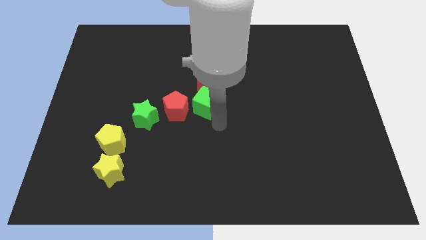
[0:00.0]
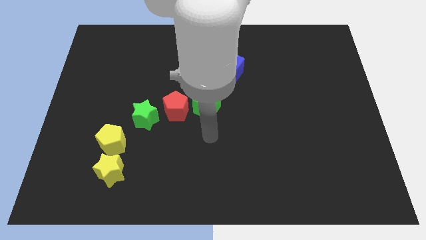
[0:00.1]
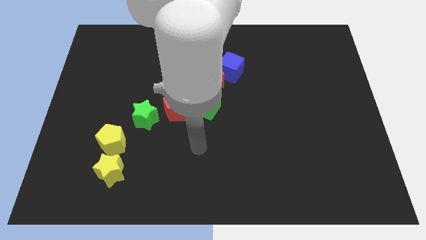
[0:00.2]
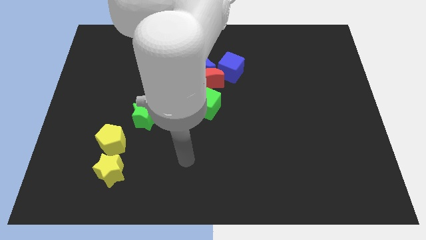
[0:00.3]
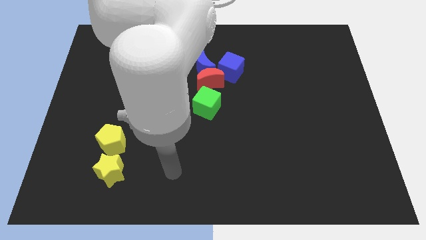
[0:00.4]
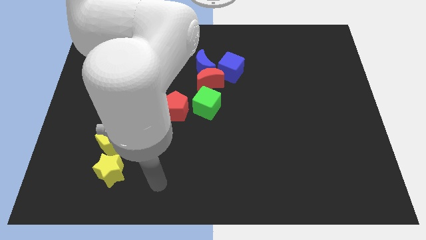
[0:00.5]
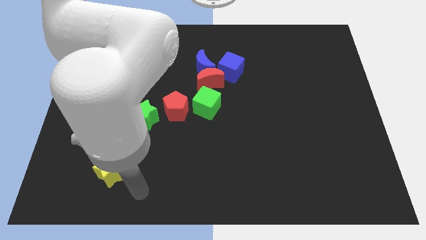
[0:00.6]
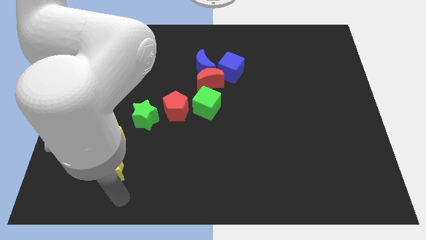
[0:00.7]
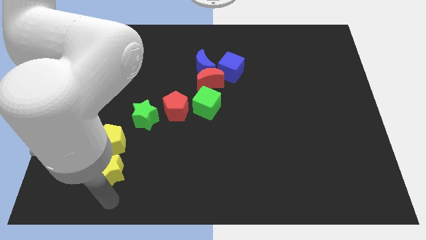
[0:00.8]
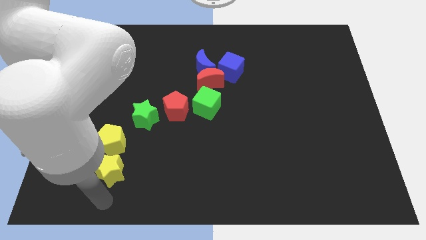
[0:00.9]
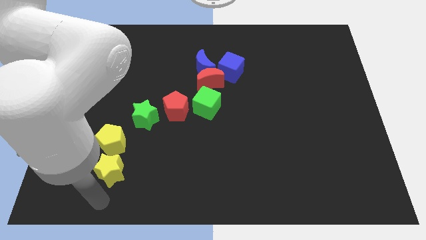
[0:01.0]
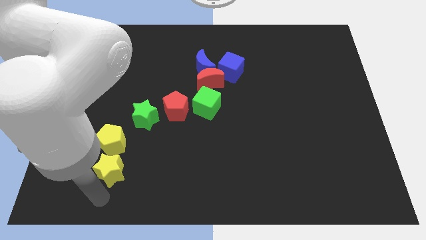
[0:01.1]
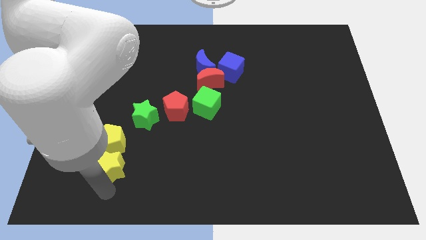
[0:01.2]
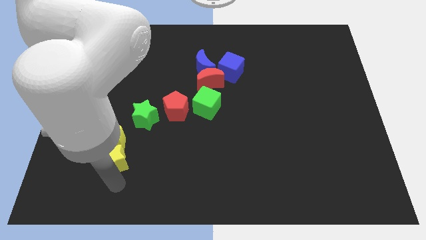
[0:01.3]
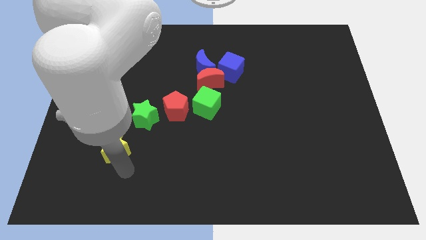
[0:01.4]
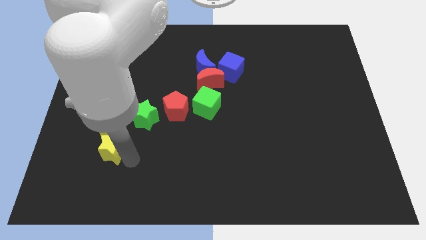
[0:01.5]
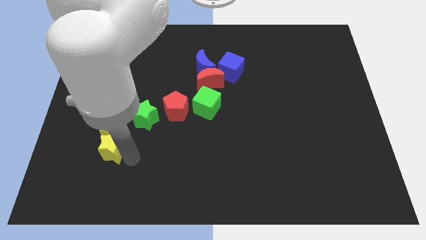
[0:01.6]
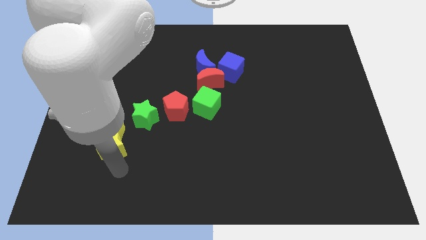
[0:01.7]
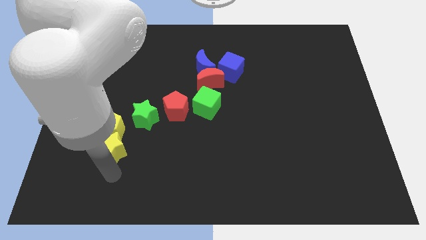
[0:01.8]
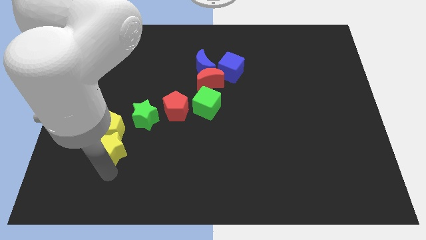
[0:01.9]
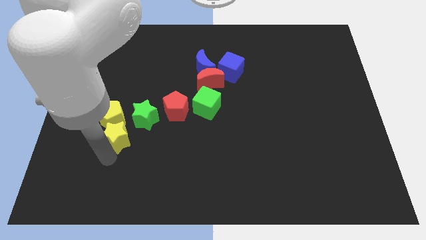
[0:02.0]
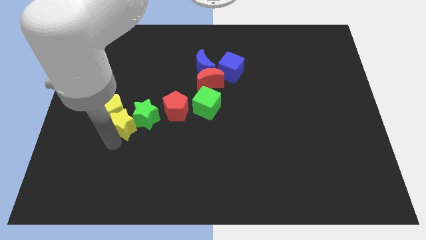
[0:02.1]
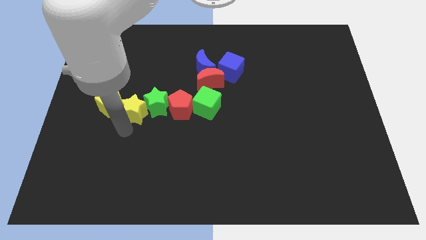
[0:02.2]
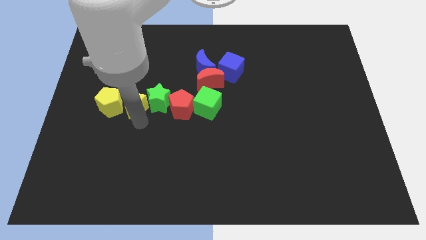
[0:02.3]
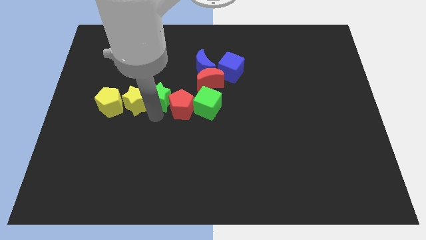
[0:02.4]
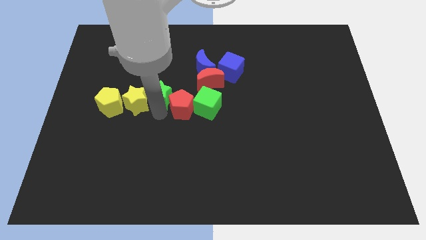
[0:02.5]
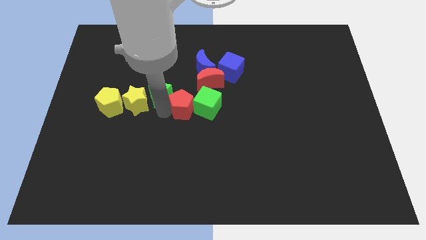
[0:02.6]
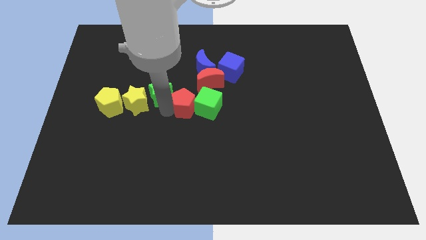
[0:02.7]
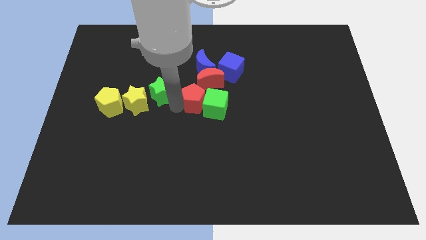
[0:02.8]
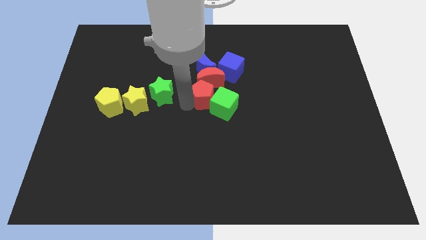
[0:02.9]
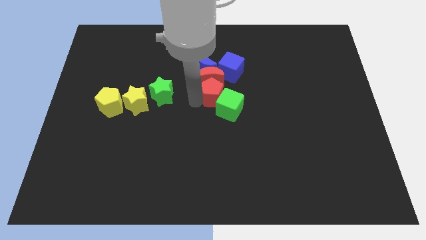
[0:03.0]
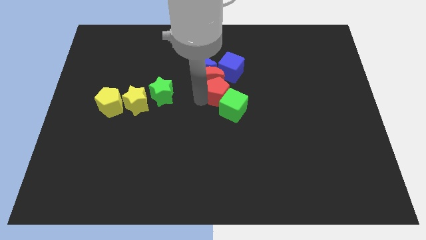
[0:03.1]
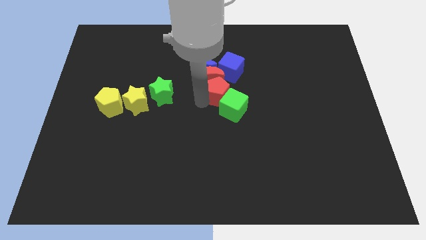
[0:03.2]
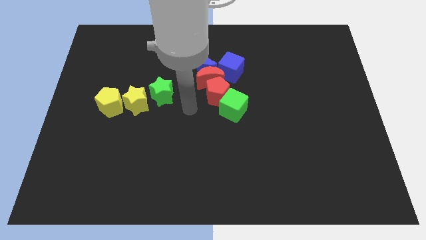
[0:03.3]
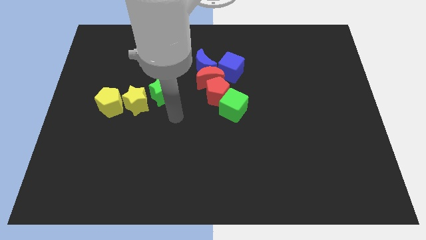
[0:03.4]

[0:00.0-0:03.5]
push the yellow star into the yellow pentagon

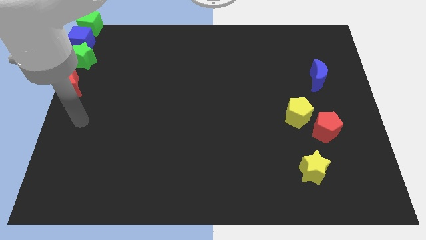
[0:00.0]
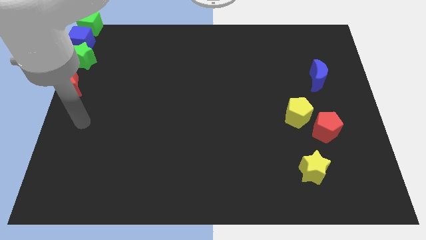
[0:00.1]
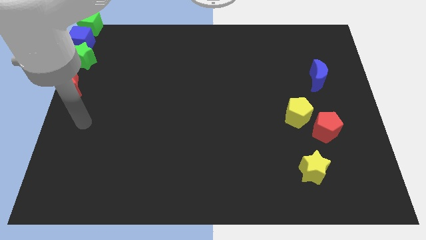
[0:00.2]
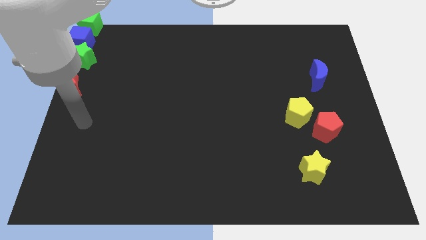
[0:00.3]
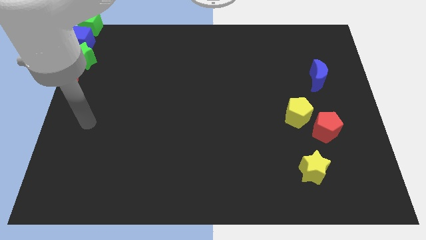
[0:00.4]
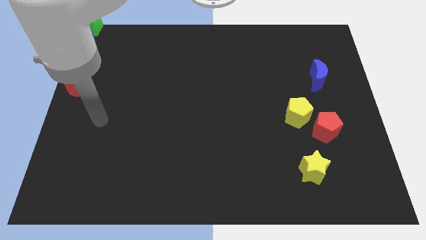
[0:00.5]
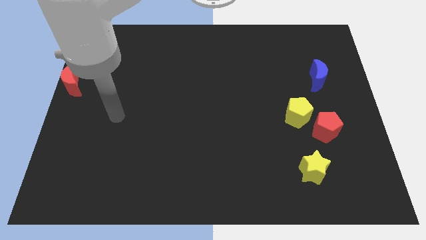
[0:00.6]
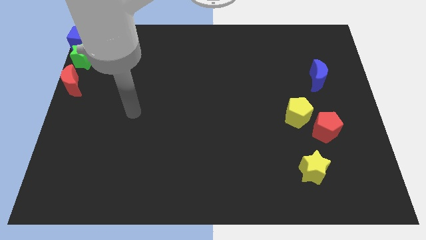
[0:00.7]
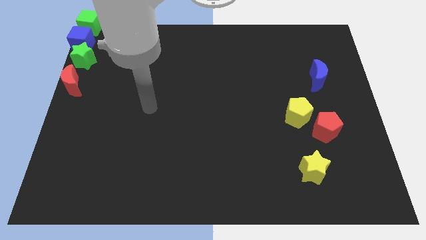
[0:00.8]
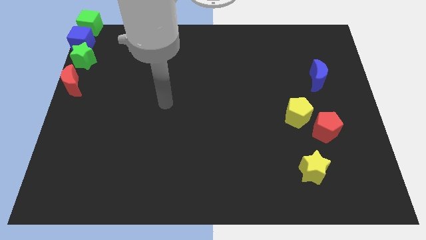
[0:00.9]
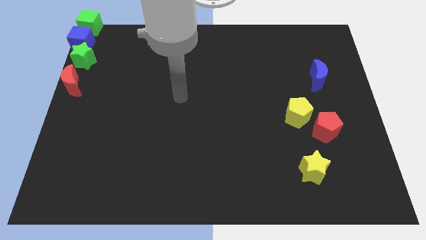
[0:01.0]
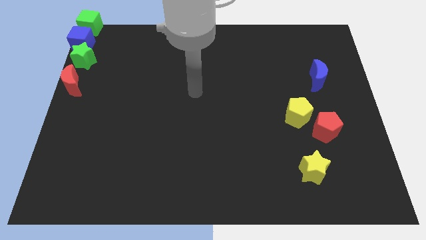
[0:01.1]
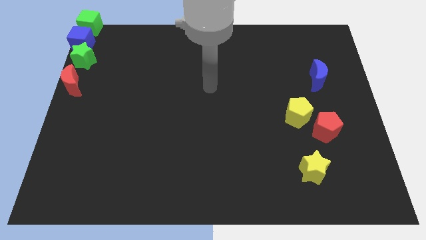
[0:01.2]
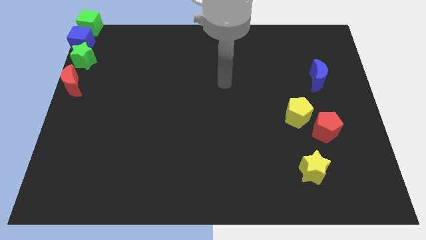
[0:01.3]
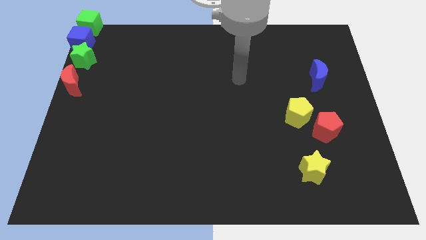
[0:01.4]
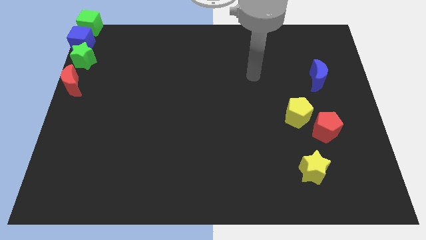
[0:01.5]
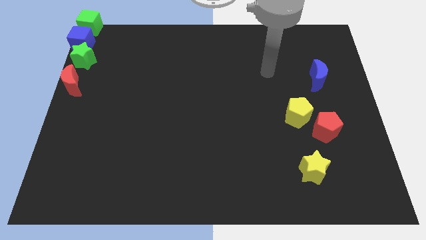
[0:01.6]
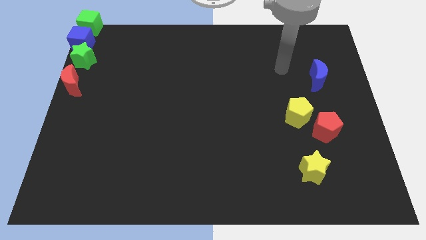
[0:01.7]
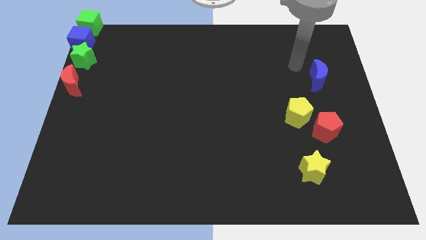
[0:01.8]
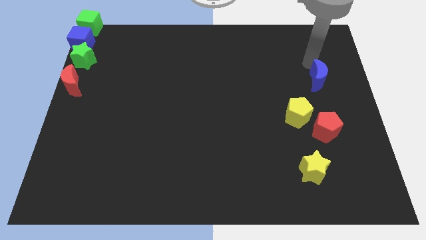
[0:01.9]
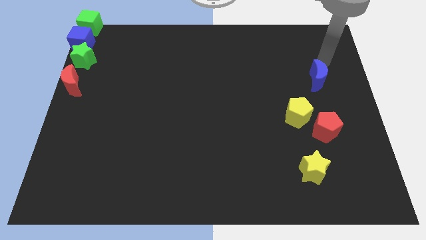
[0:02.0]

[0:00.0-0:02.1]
move your arm to the top of the blue moon

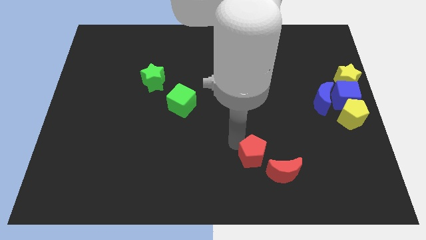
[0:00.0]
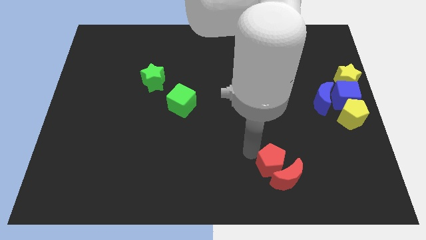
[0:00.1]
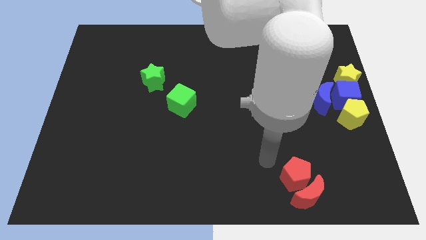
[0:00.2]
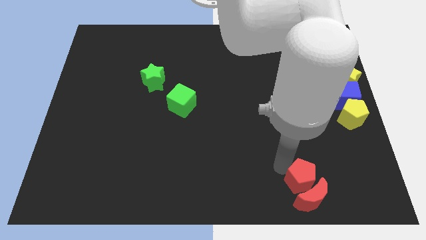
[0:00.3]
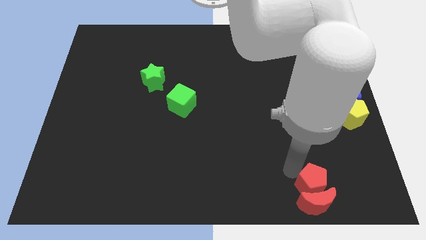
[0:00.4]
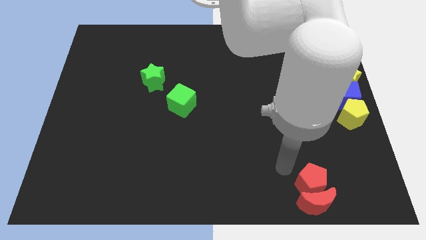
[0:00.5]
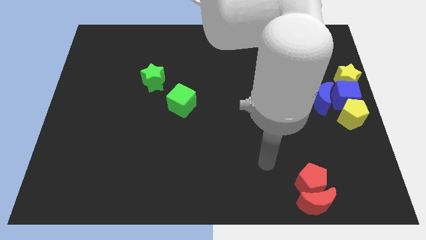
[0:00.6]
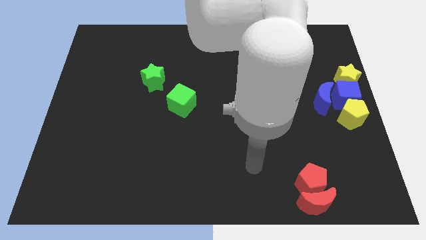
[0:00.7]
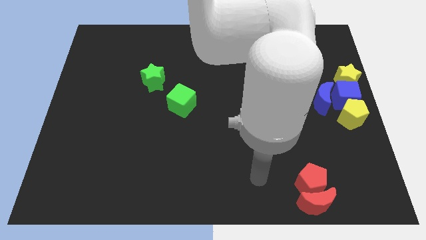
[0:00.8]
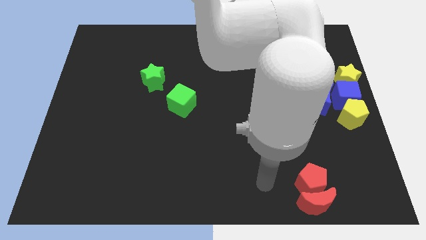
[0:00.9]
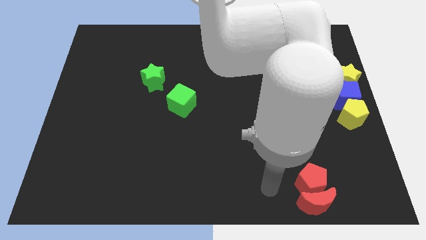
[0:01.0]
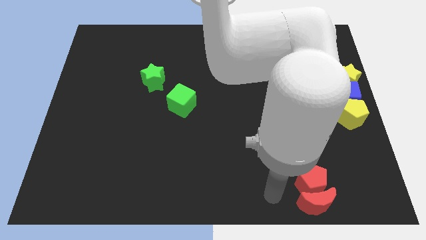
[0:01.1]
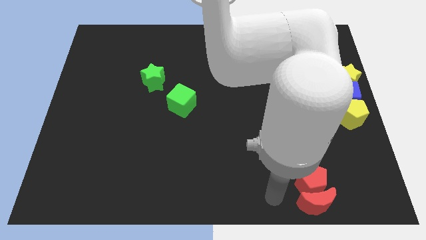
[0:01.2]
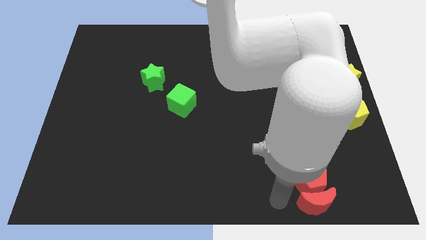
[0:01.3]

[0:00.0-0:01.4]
push the red pentagon into the red crescent

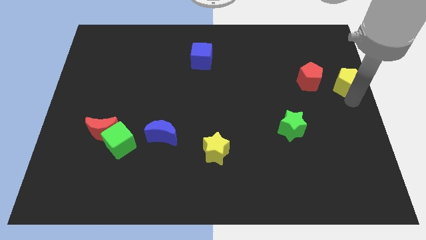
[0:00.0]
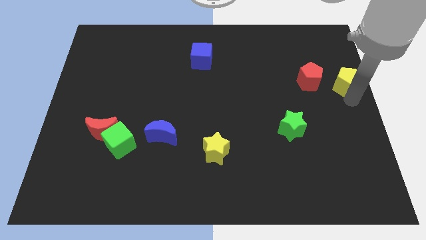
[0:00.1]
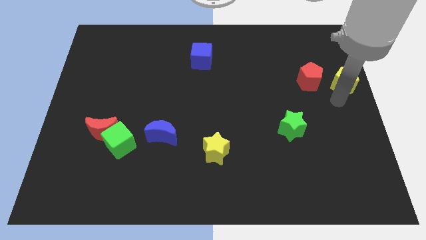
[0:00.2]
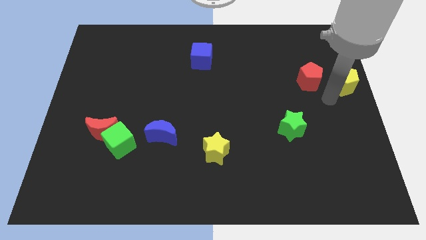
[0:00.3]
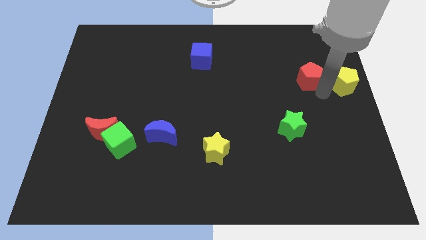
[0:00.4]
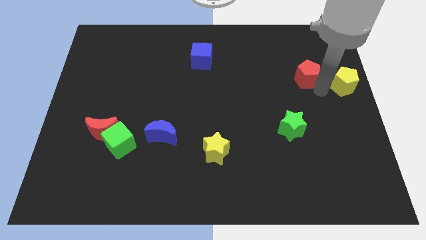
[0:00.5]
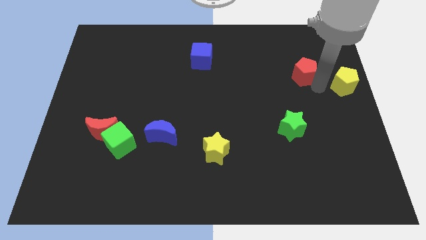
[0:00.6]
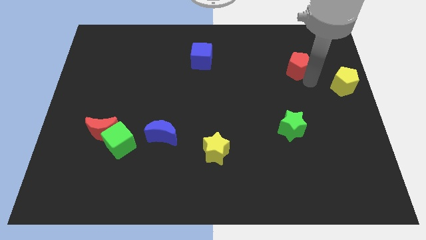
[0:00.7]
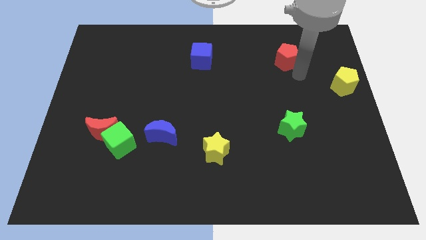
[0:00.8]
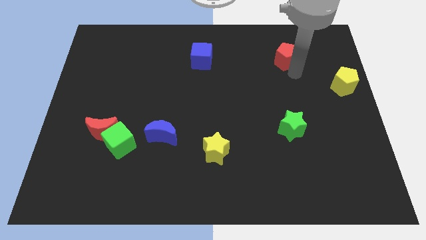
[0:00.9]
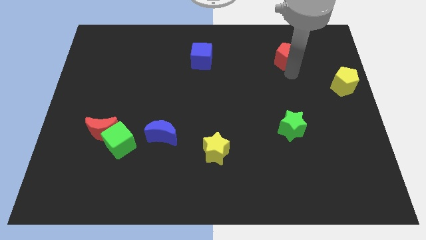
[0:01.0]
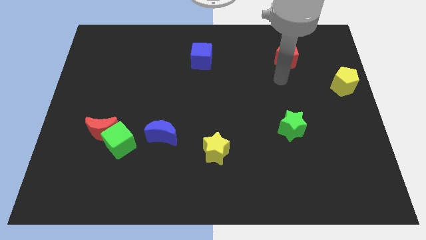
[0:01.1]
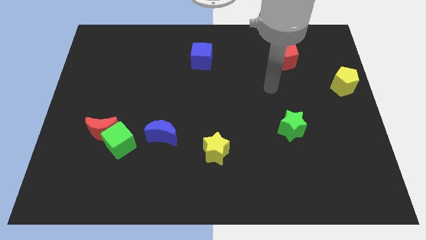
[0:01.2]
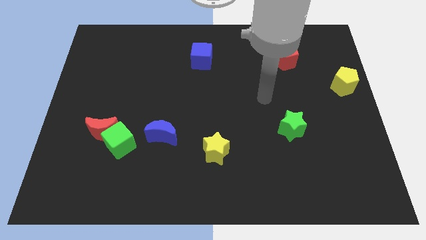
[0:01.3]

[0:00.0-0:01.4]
move the red pentagon to the top center

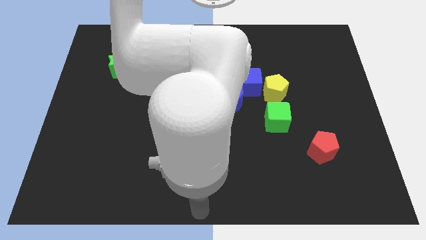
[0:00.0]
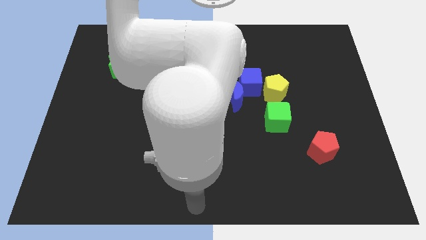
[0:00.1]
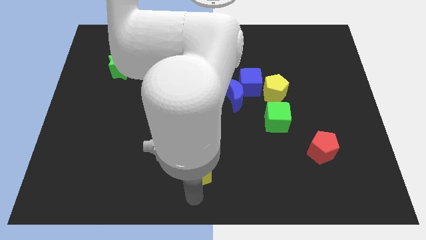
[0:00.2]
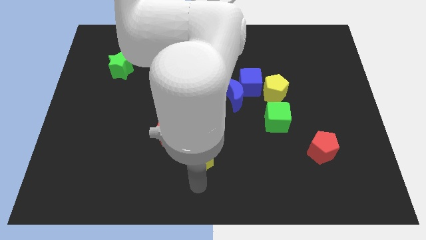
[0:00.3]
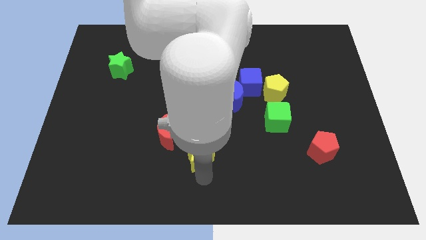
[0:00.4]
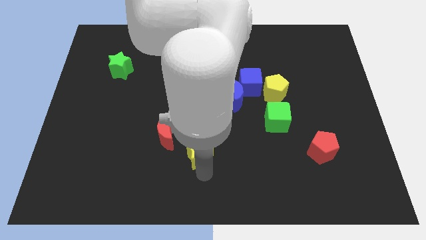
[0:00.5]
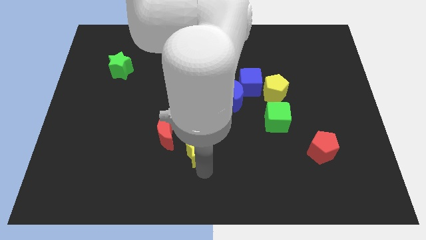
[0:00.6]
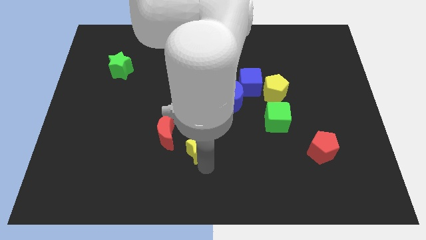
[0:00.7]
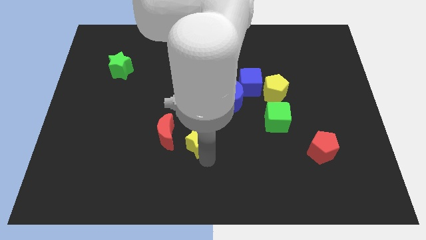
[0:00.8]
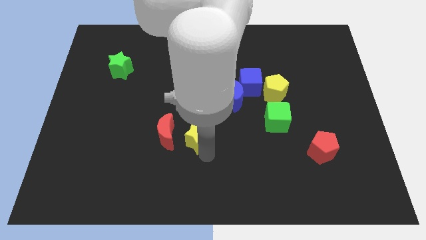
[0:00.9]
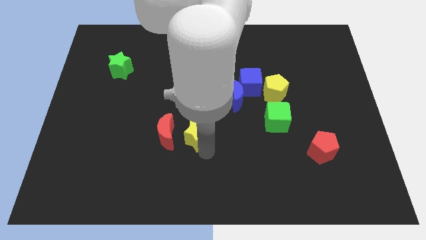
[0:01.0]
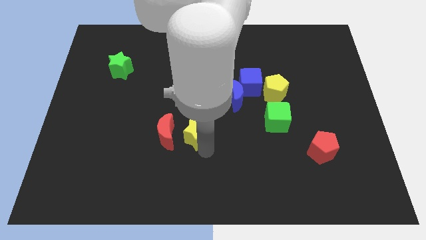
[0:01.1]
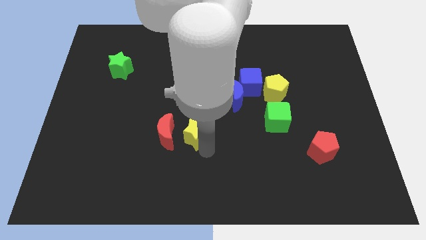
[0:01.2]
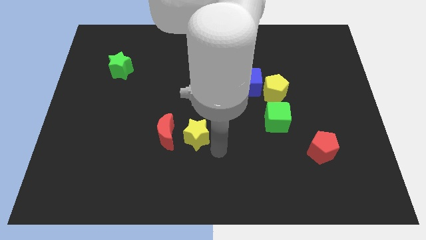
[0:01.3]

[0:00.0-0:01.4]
move the yellow star right to the red crescent
